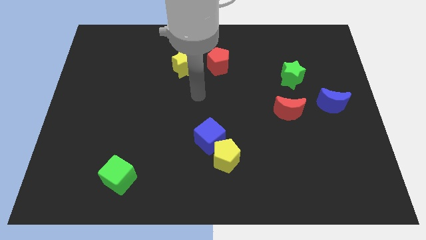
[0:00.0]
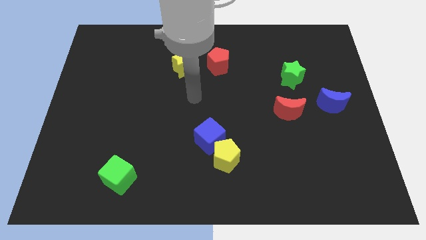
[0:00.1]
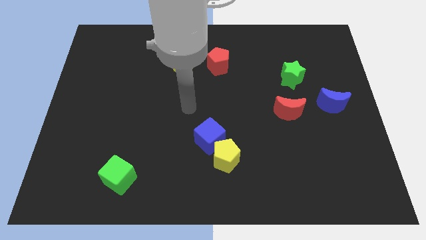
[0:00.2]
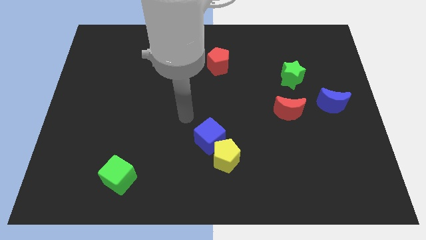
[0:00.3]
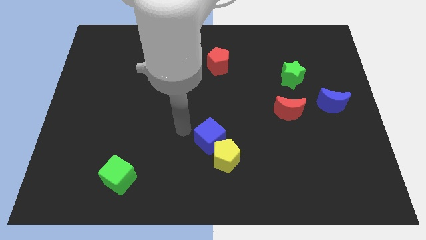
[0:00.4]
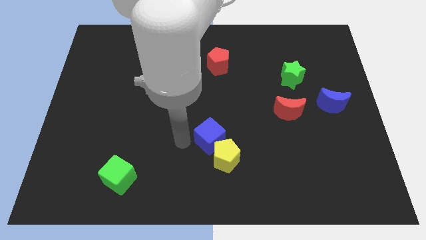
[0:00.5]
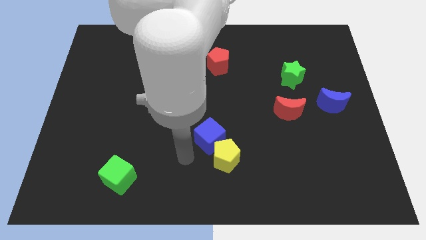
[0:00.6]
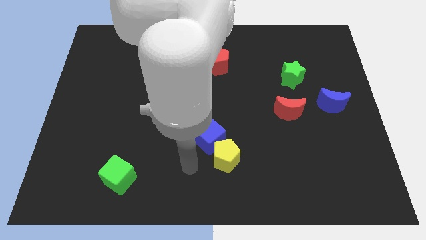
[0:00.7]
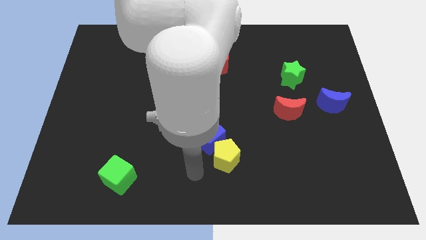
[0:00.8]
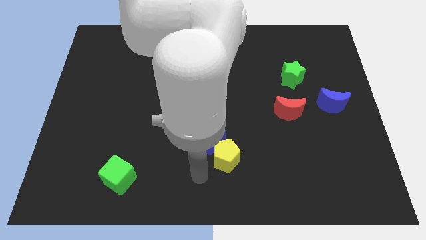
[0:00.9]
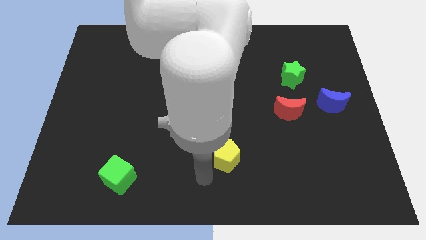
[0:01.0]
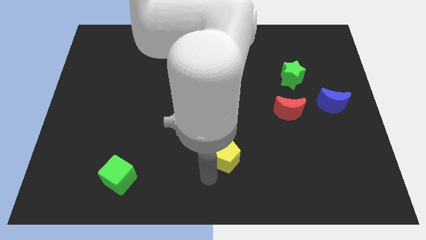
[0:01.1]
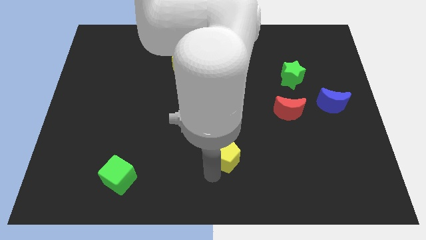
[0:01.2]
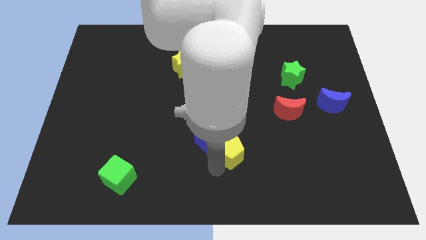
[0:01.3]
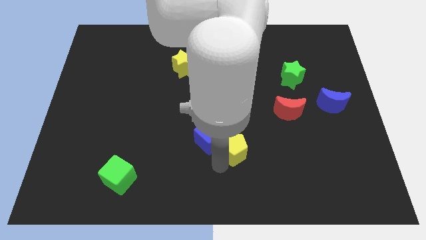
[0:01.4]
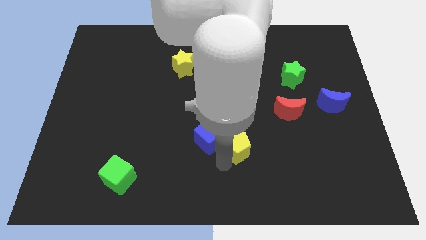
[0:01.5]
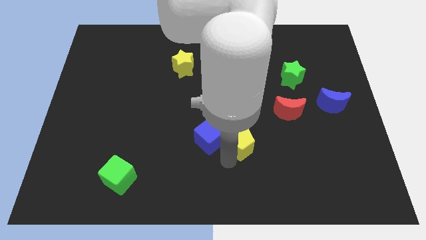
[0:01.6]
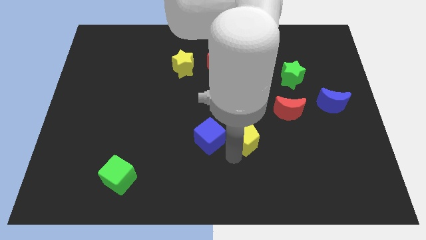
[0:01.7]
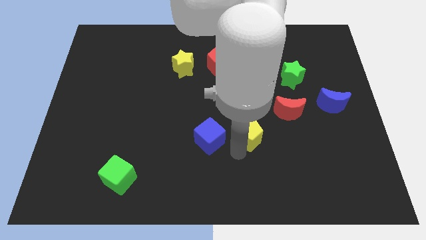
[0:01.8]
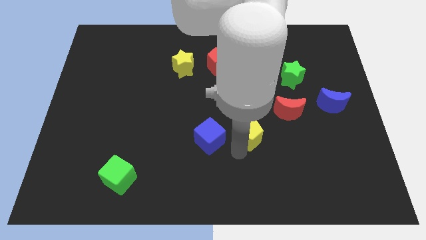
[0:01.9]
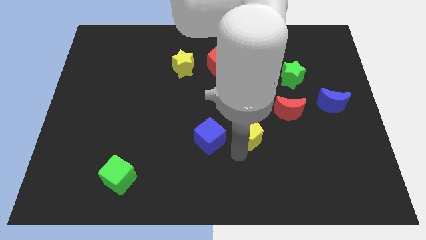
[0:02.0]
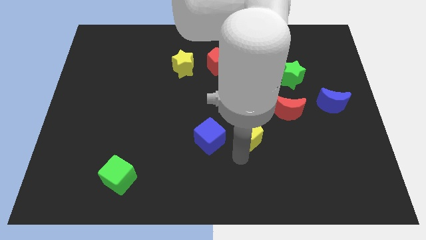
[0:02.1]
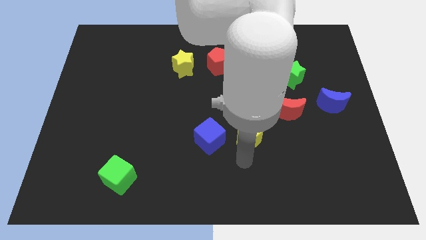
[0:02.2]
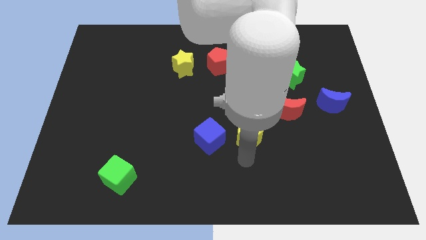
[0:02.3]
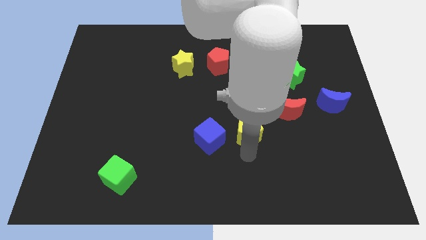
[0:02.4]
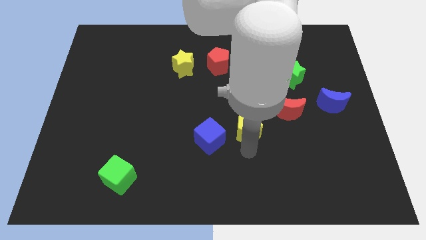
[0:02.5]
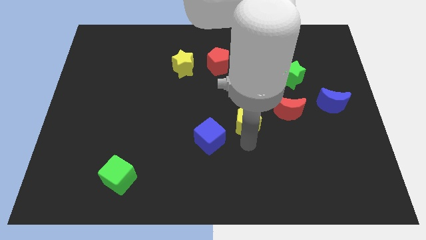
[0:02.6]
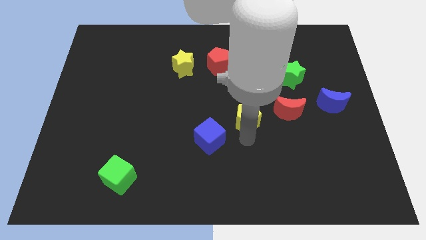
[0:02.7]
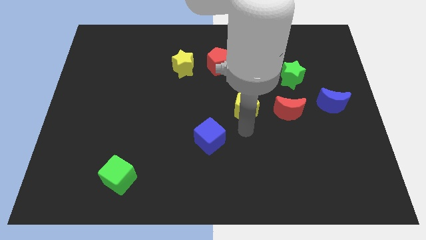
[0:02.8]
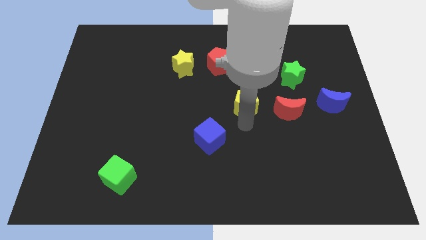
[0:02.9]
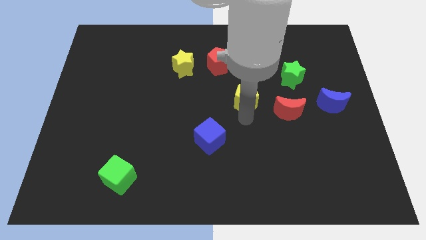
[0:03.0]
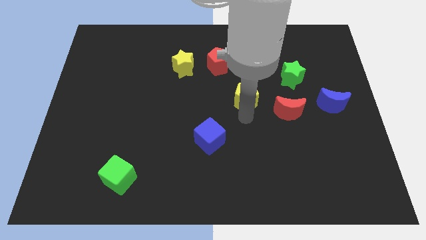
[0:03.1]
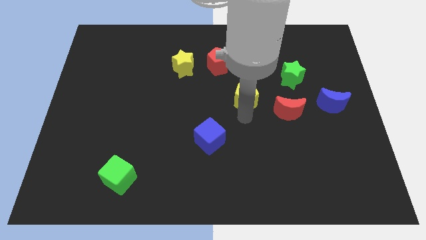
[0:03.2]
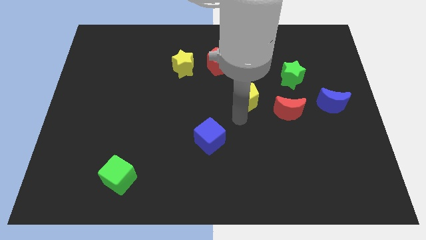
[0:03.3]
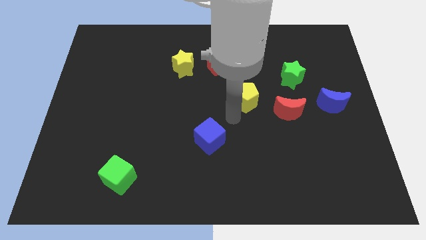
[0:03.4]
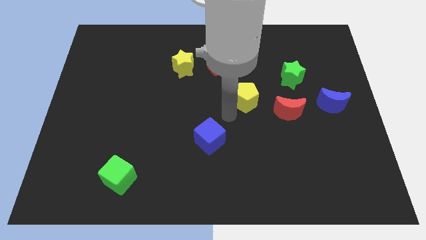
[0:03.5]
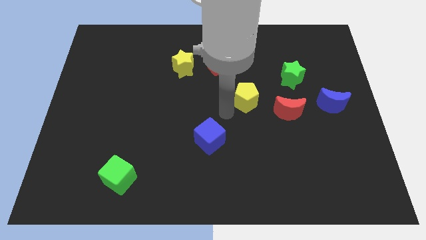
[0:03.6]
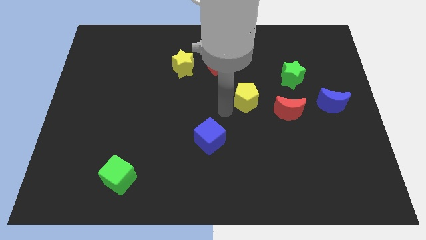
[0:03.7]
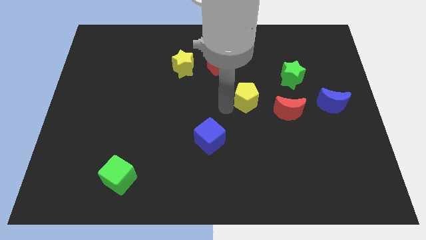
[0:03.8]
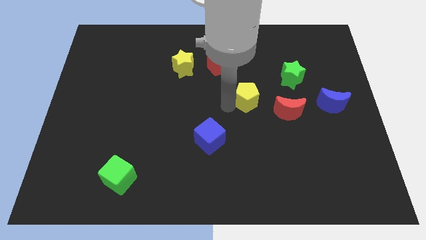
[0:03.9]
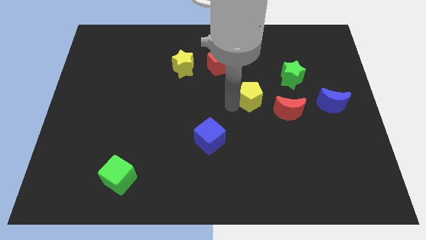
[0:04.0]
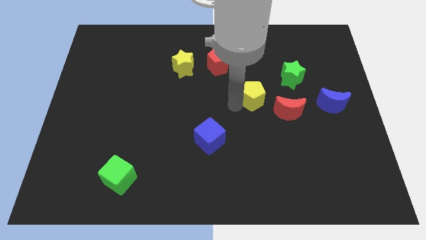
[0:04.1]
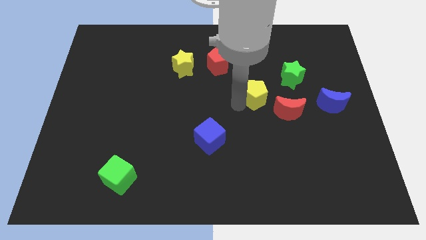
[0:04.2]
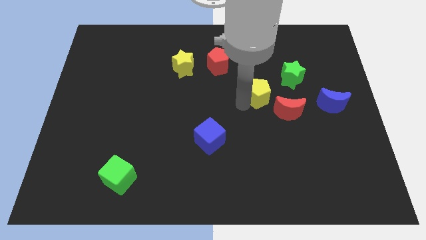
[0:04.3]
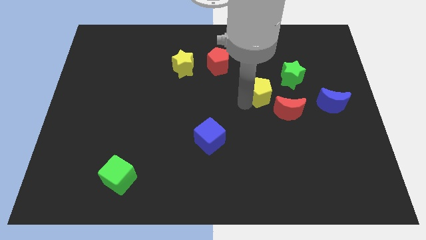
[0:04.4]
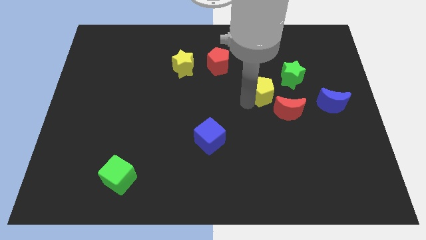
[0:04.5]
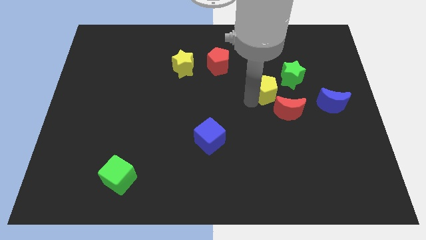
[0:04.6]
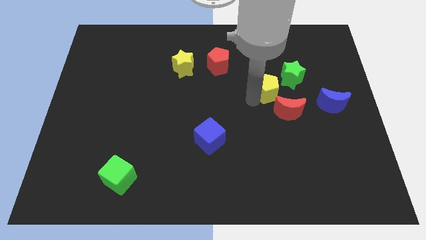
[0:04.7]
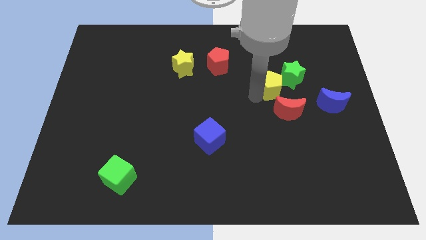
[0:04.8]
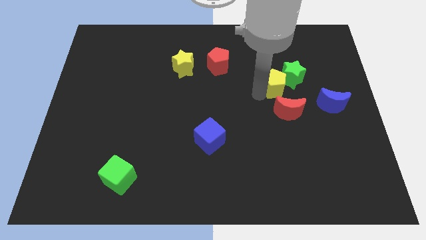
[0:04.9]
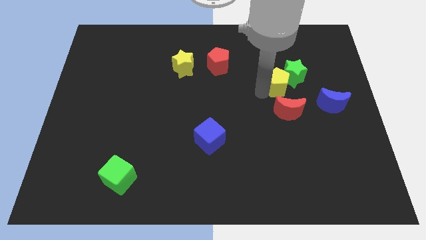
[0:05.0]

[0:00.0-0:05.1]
slide the yellow pentagon next to the green star

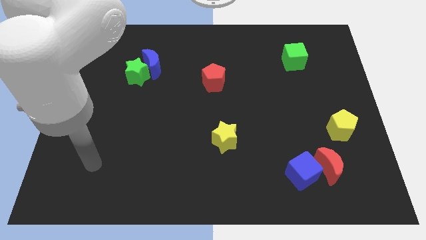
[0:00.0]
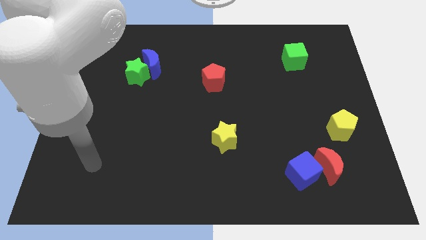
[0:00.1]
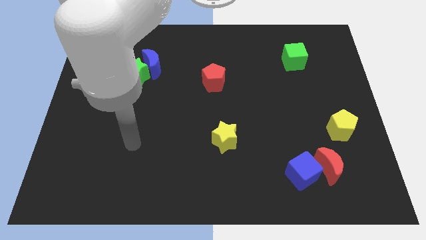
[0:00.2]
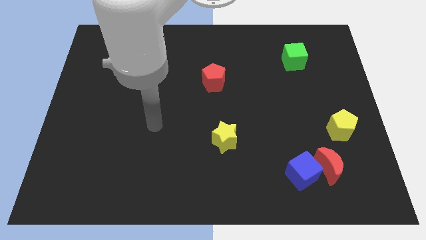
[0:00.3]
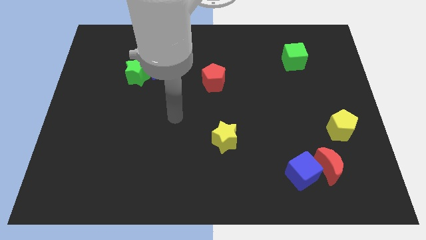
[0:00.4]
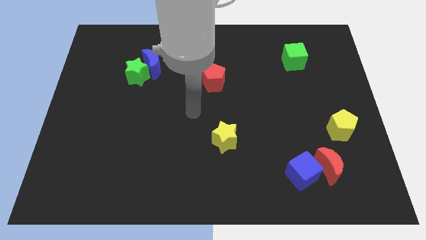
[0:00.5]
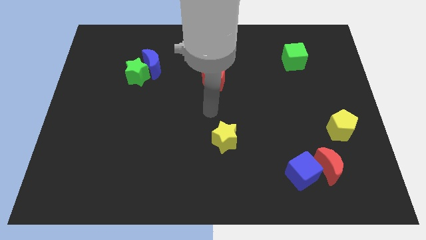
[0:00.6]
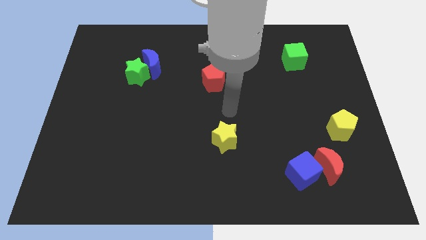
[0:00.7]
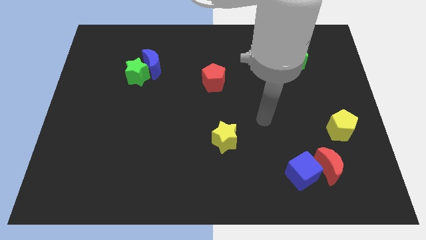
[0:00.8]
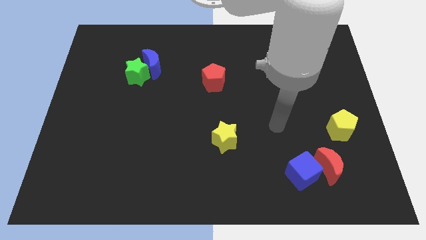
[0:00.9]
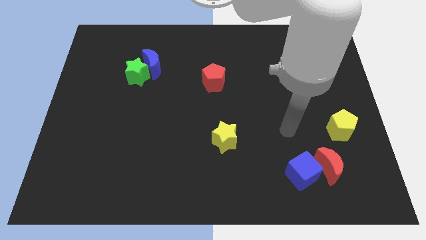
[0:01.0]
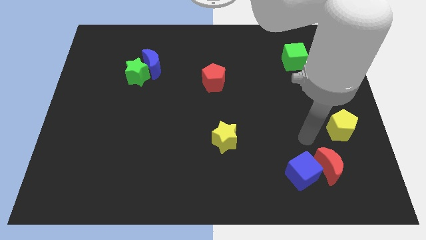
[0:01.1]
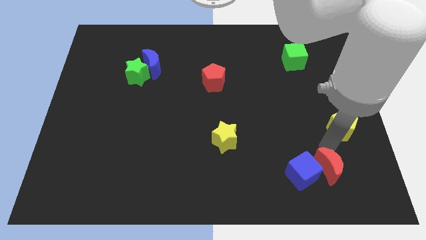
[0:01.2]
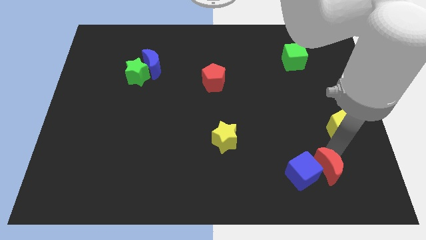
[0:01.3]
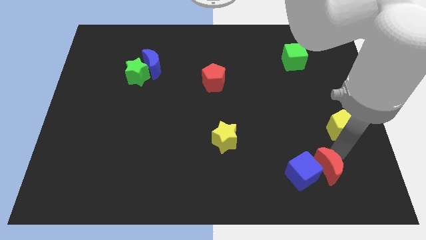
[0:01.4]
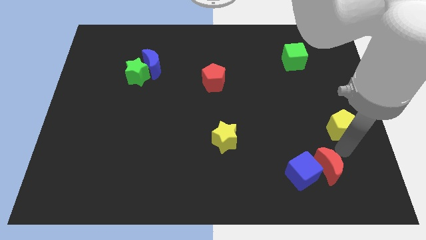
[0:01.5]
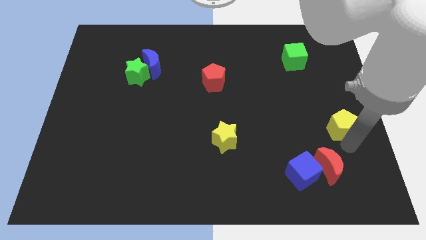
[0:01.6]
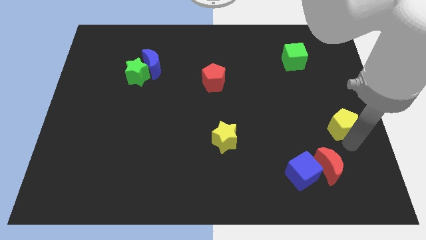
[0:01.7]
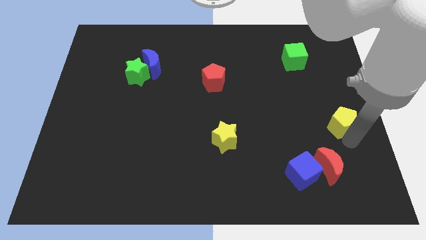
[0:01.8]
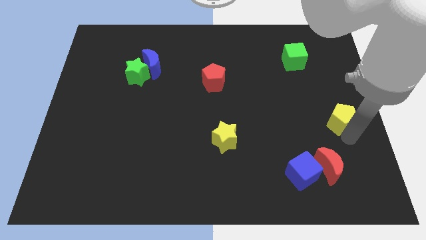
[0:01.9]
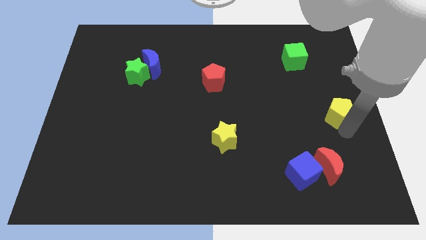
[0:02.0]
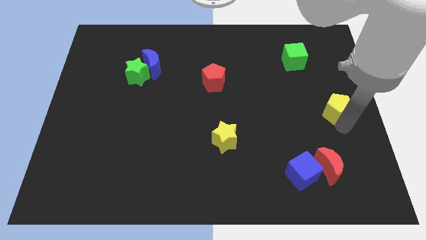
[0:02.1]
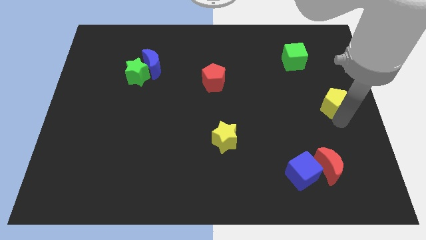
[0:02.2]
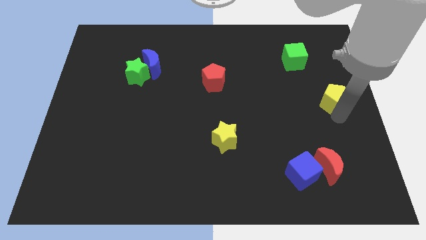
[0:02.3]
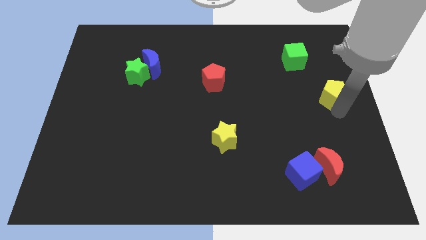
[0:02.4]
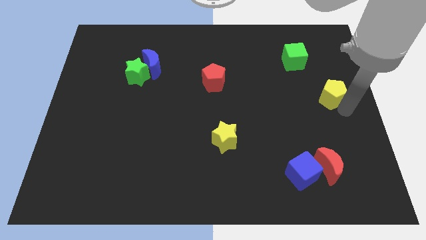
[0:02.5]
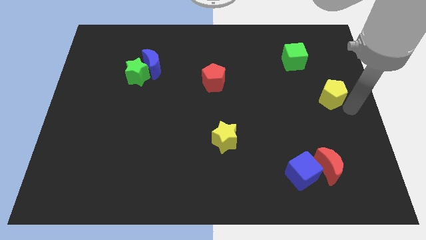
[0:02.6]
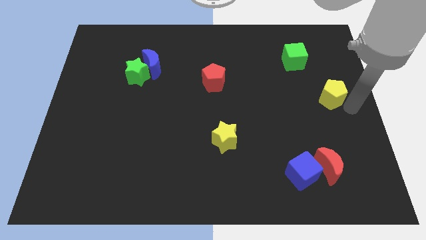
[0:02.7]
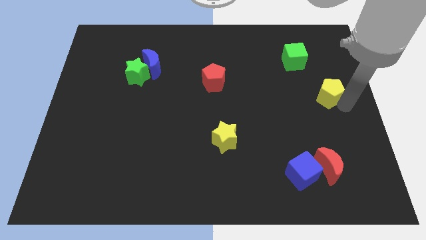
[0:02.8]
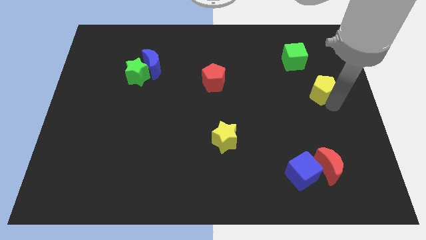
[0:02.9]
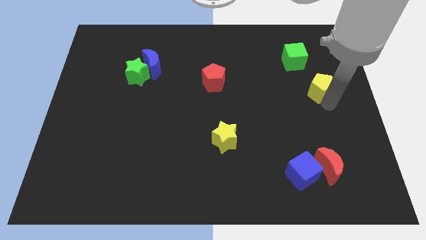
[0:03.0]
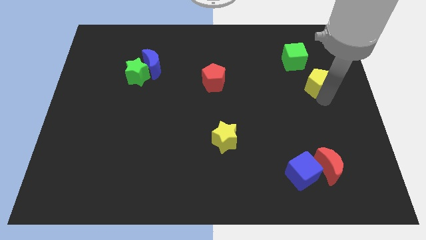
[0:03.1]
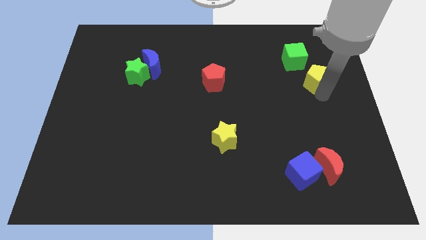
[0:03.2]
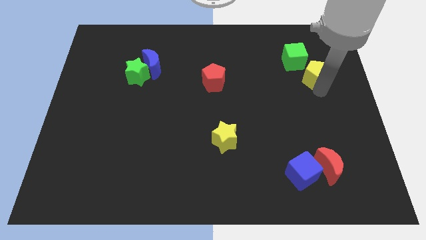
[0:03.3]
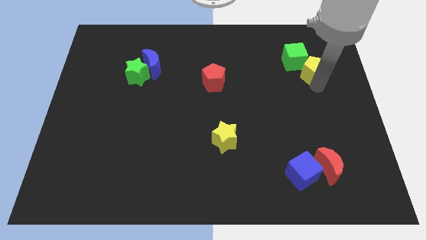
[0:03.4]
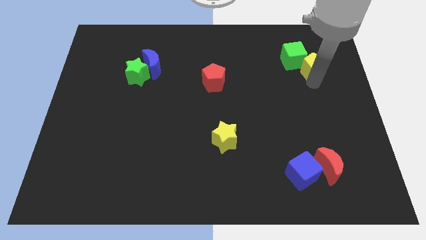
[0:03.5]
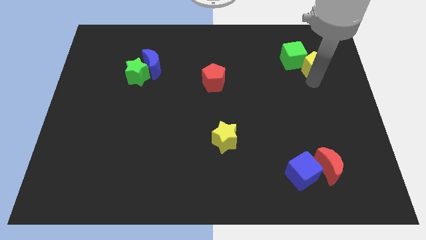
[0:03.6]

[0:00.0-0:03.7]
push the yellow pentagon next to the green cube
